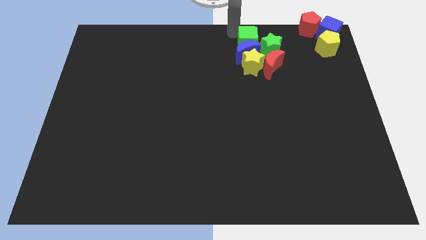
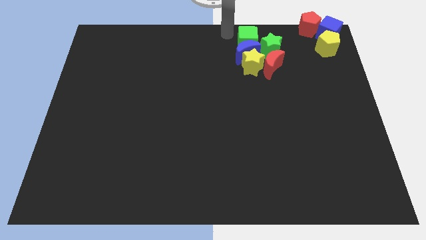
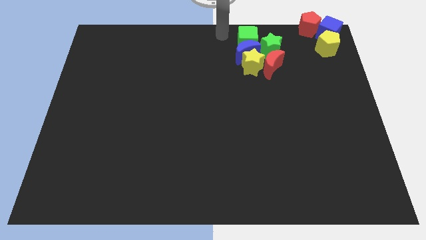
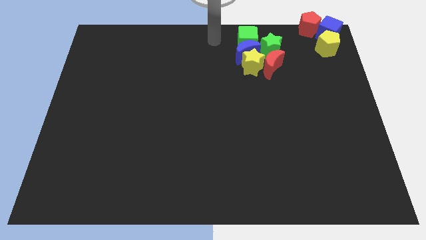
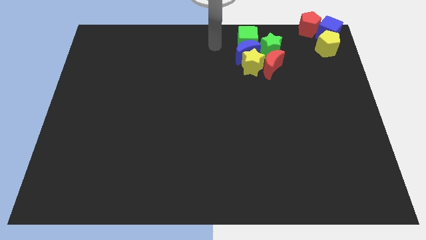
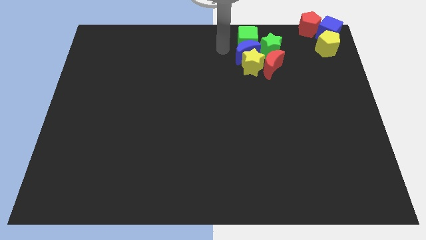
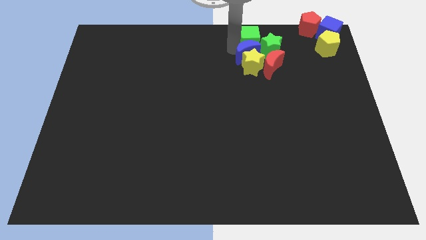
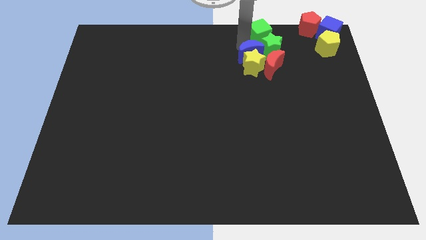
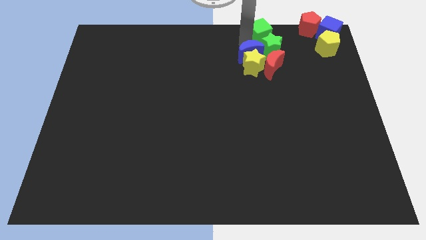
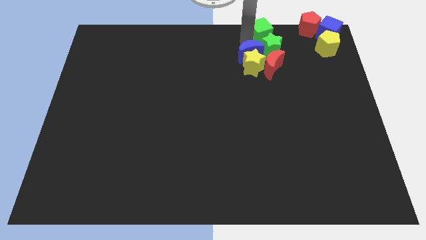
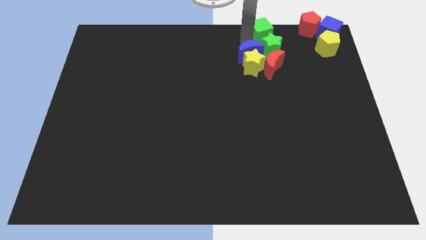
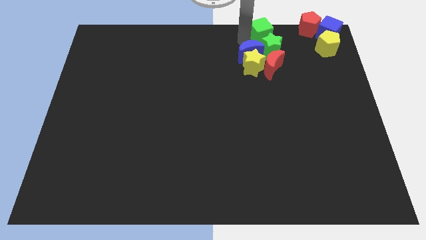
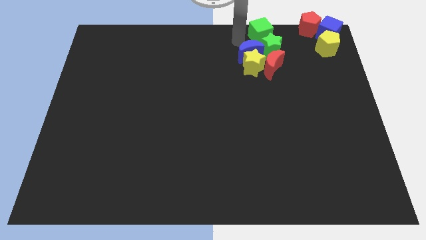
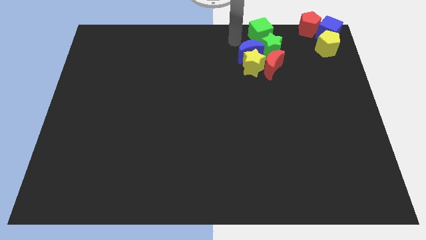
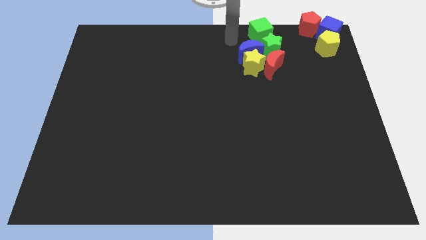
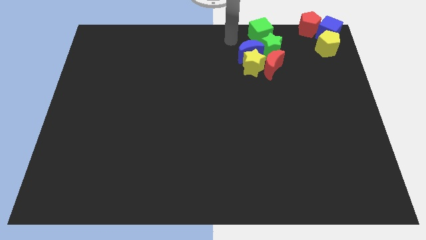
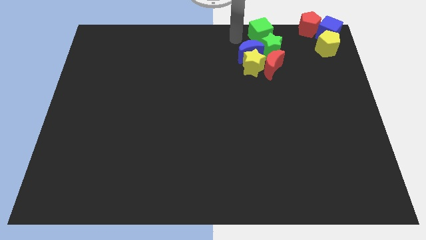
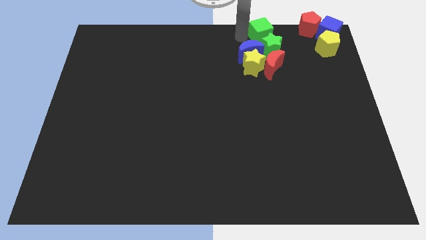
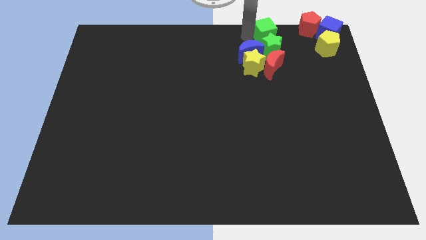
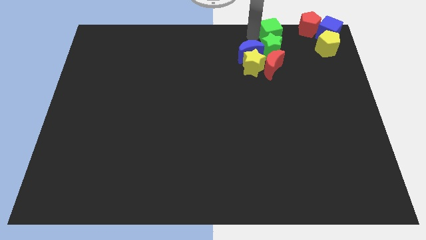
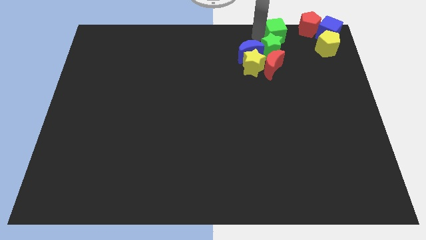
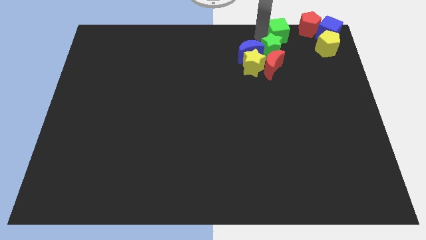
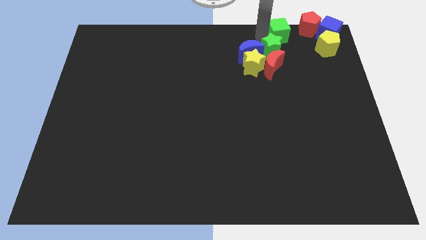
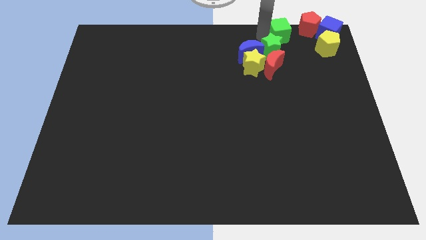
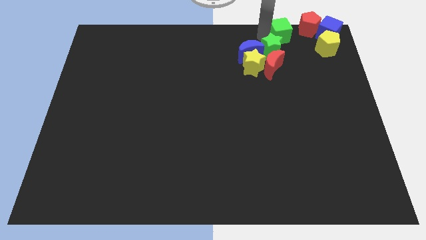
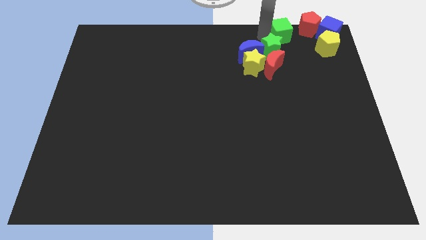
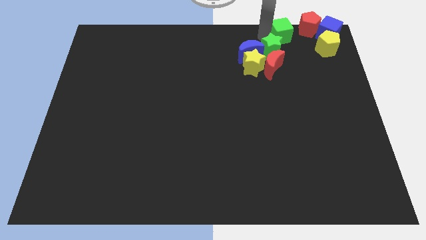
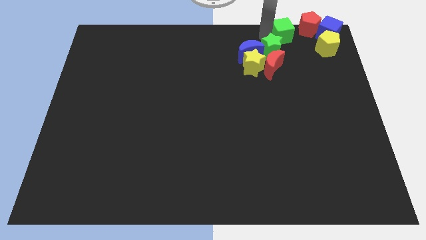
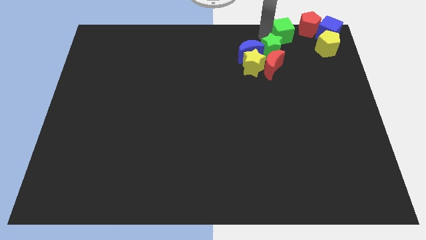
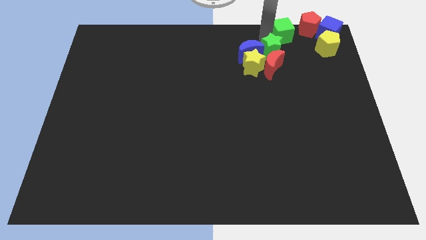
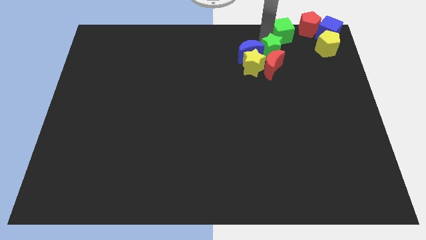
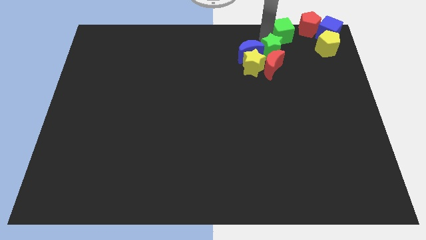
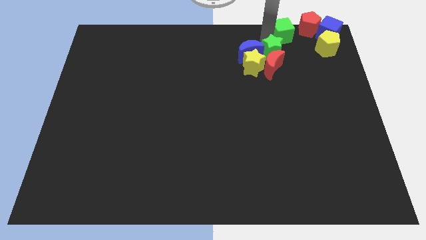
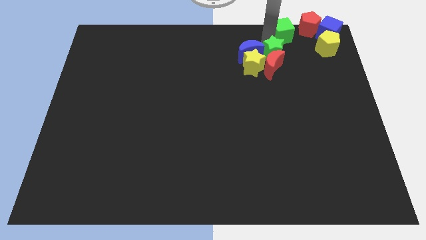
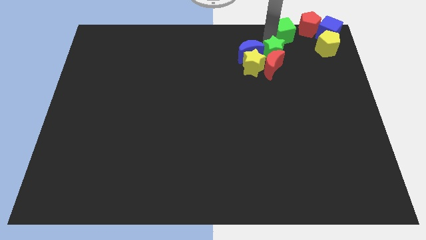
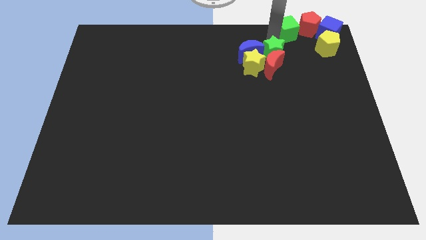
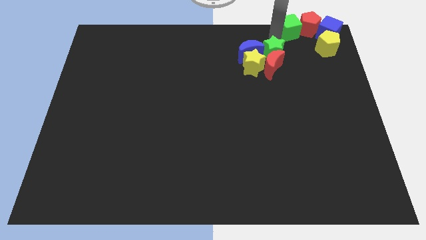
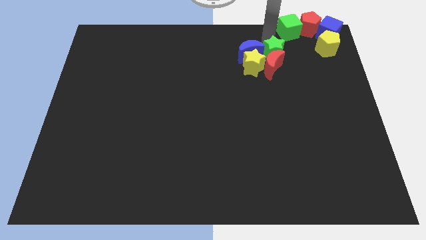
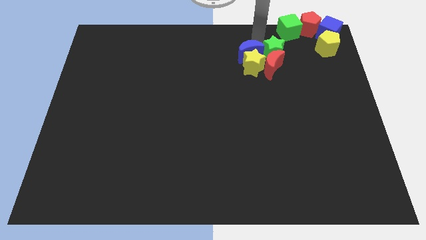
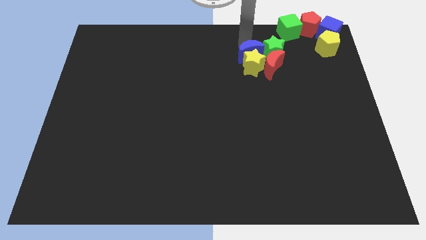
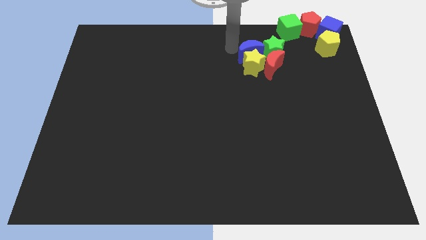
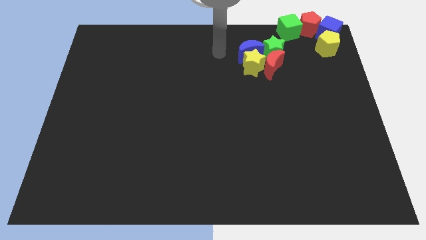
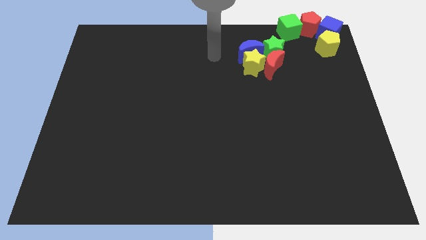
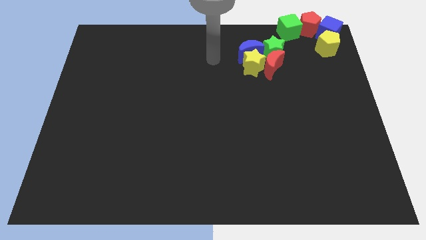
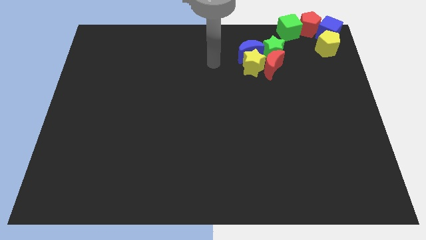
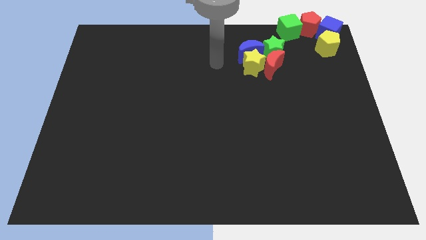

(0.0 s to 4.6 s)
place the green cube to the left of red pentagon

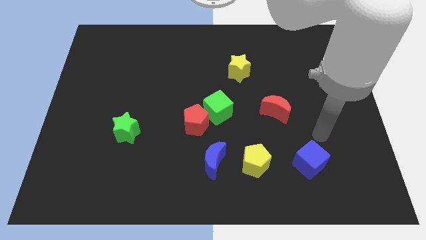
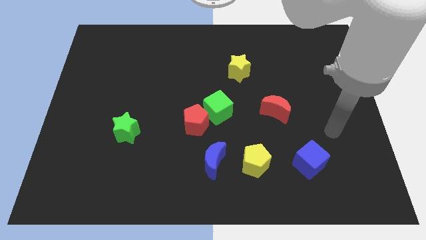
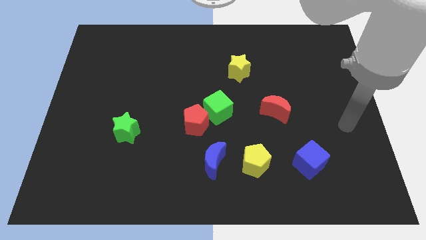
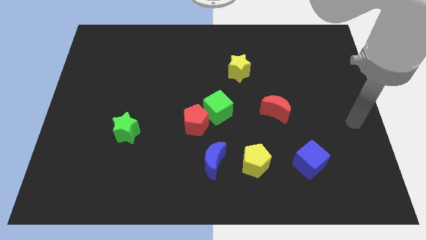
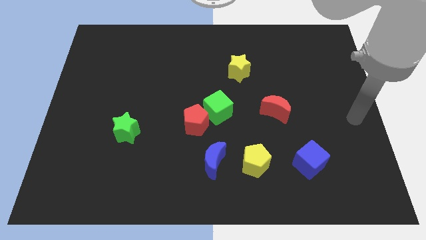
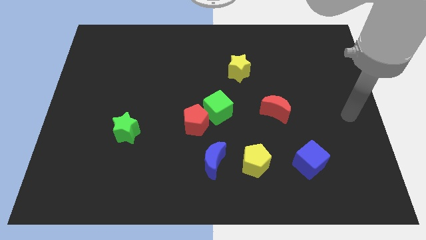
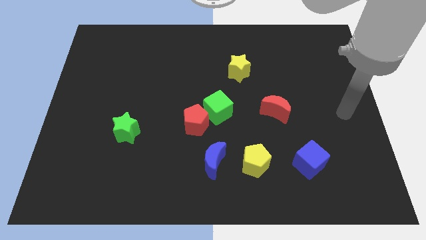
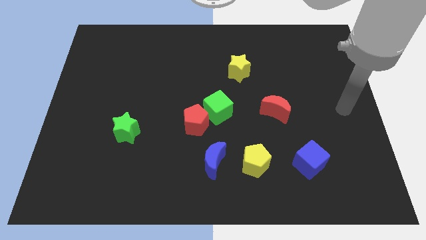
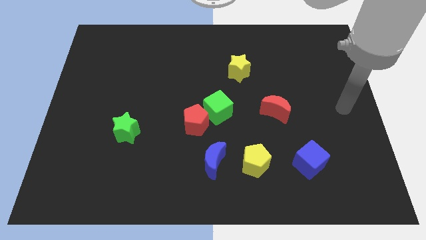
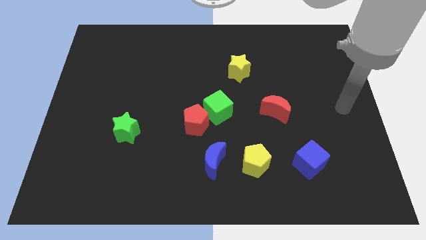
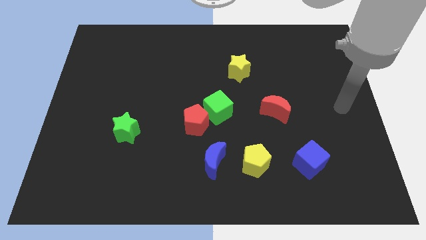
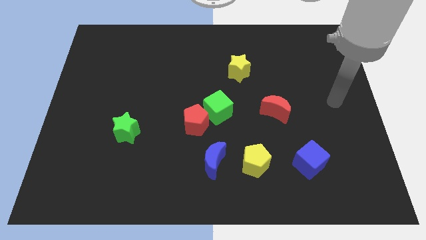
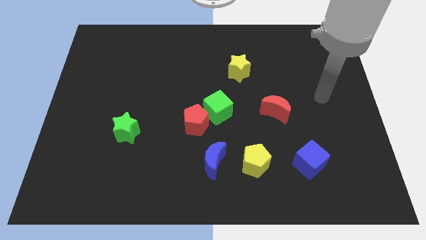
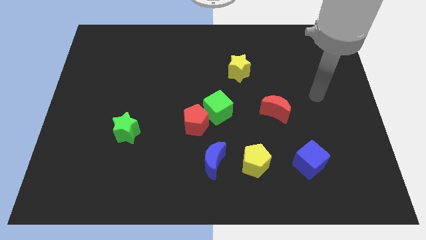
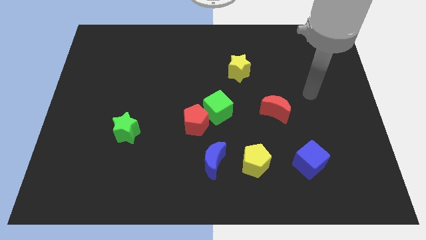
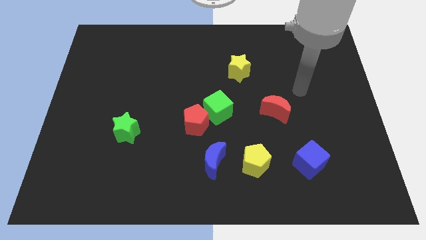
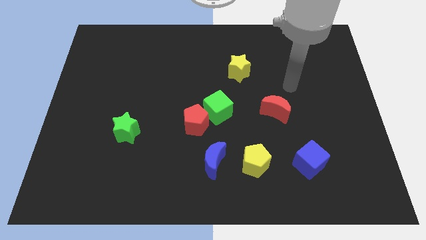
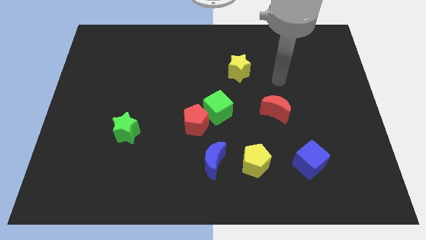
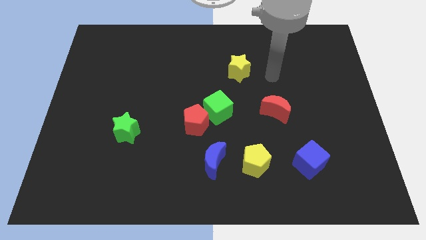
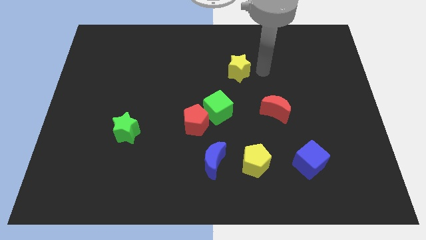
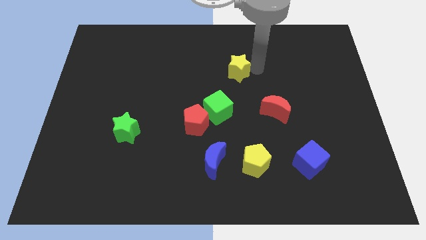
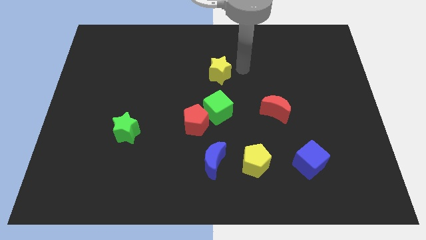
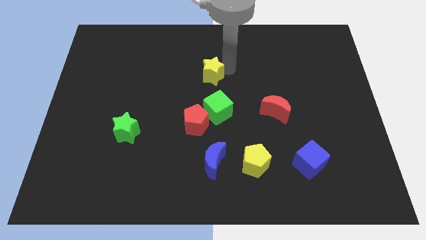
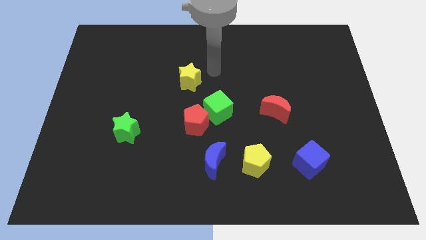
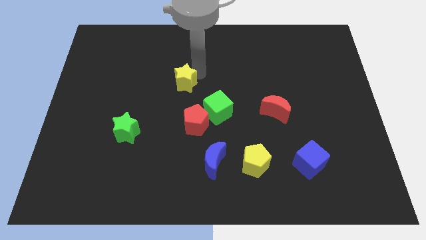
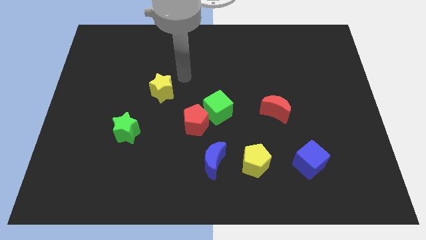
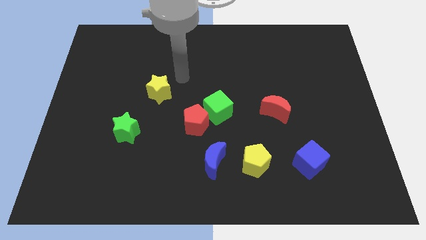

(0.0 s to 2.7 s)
push the yellow star towards the left

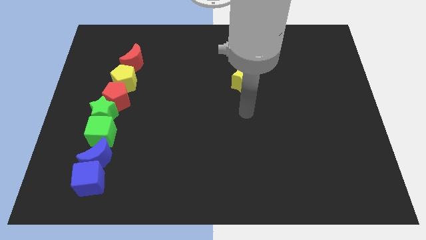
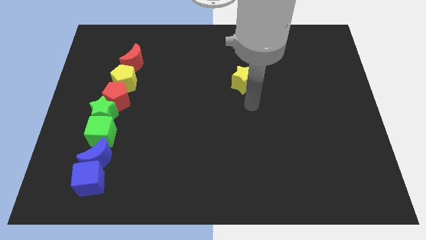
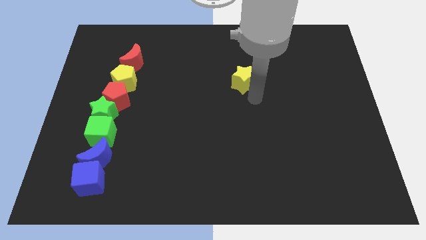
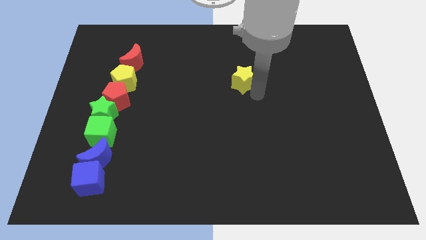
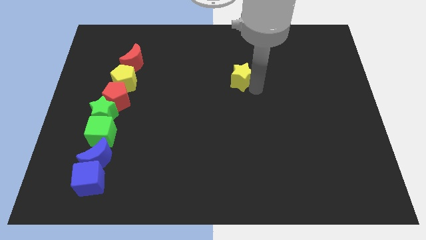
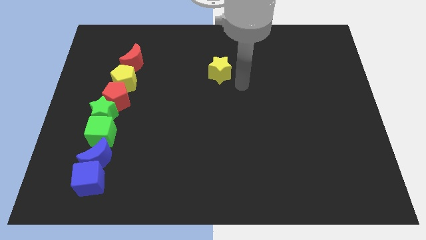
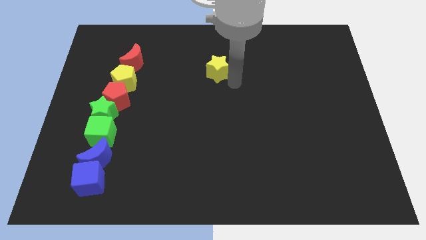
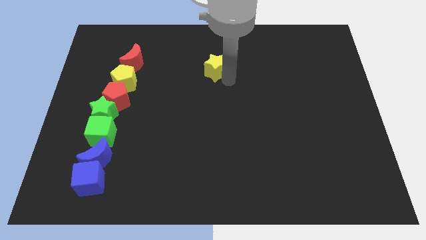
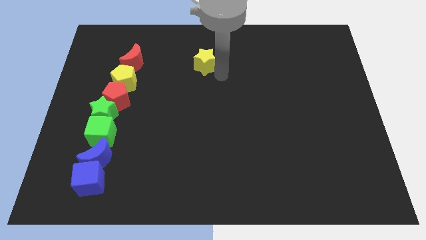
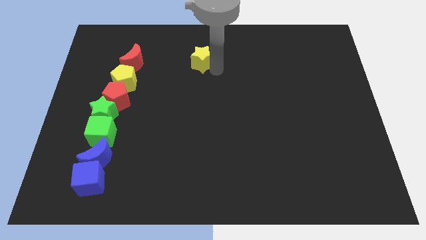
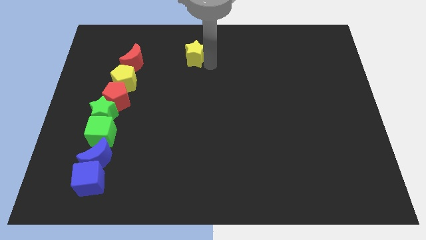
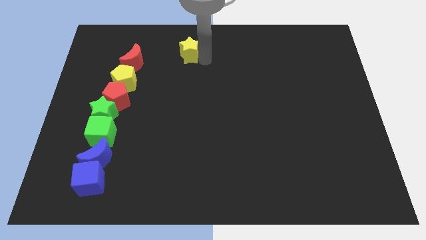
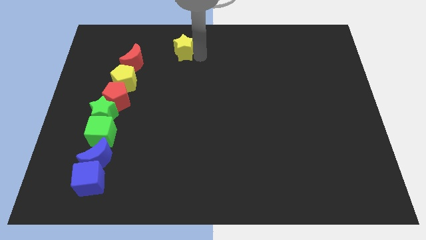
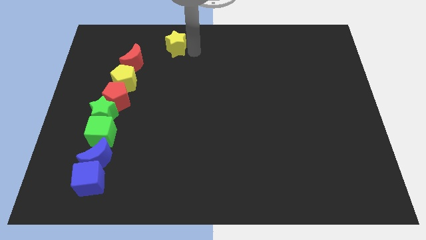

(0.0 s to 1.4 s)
move the yellow star upwards of the board

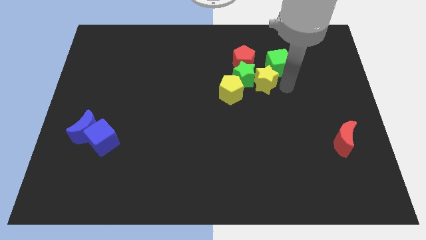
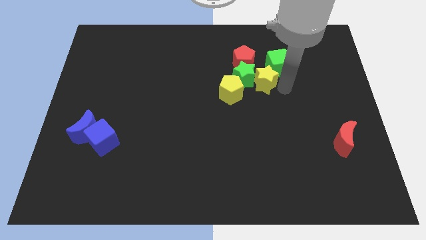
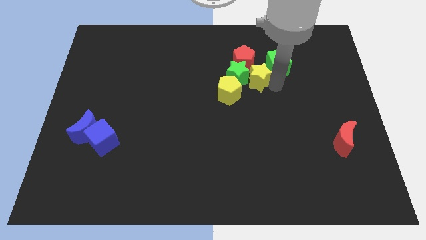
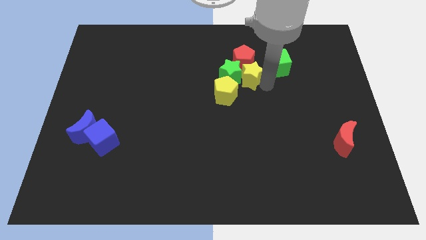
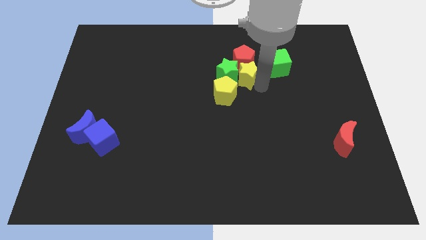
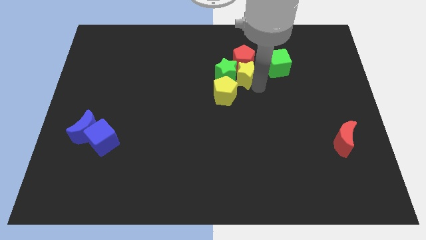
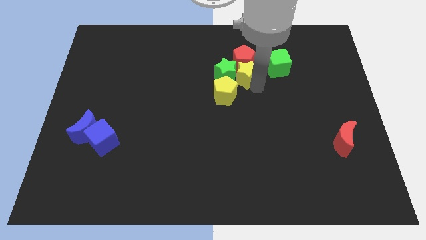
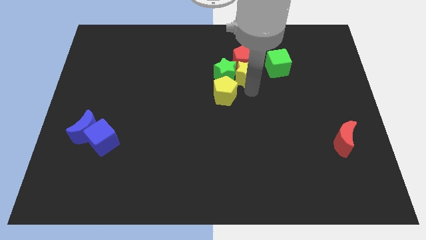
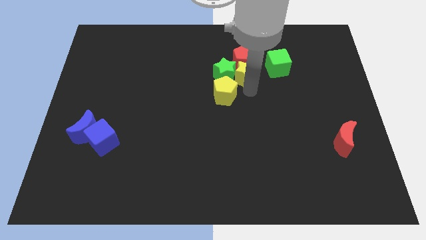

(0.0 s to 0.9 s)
push the yellow star with the green star
